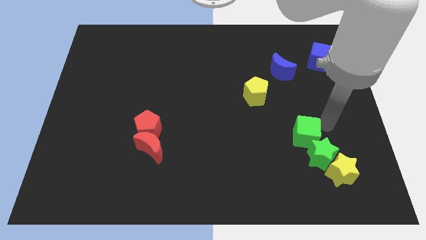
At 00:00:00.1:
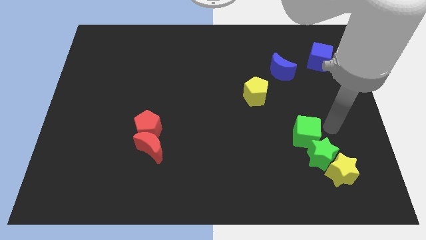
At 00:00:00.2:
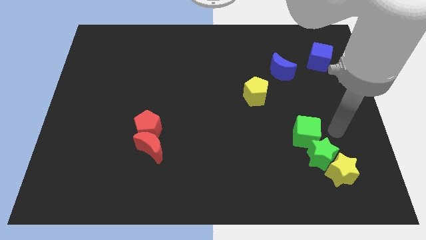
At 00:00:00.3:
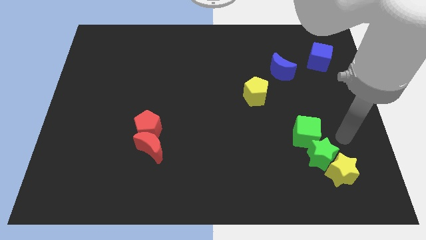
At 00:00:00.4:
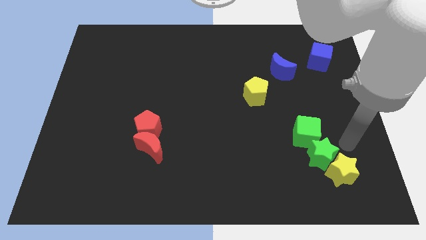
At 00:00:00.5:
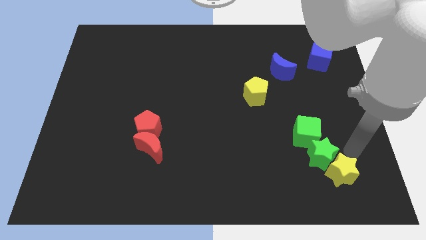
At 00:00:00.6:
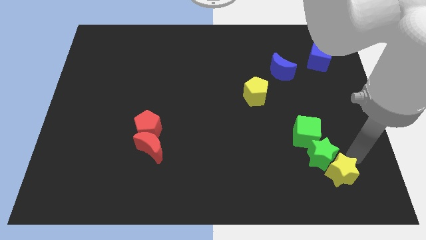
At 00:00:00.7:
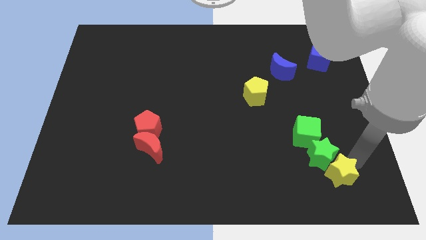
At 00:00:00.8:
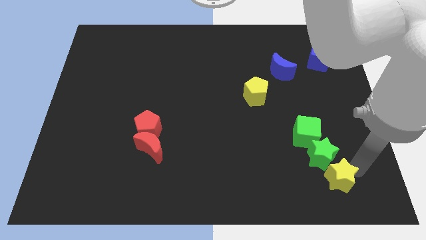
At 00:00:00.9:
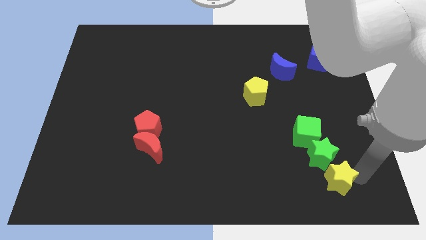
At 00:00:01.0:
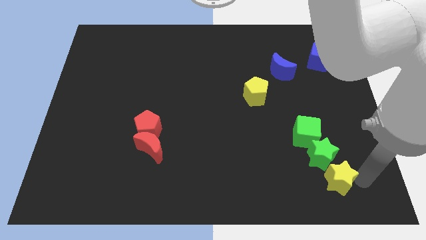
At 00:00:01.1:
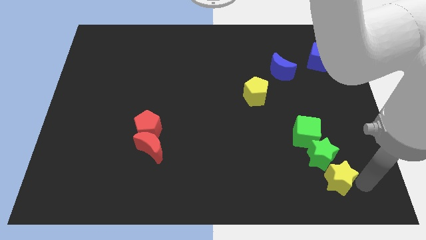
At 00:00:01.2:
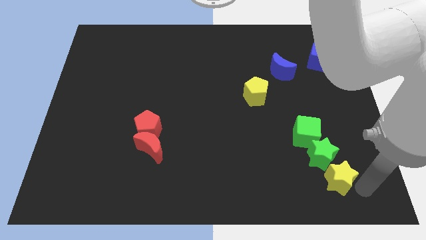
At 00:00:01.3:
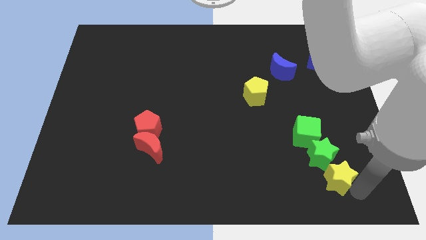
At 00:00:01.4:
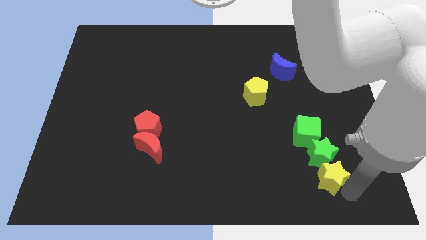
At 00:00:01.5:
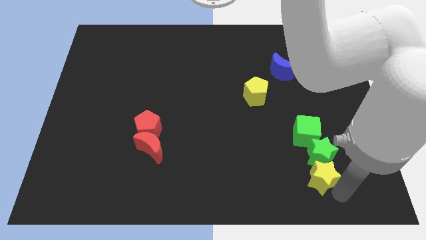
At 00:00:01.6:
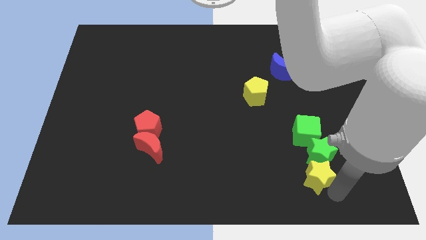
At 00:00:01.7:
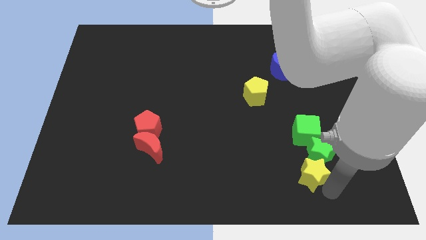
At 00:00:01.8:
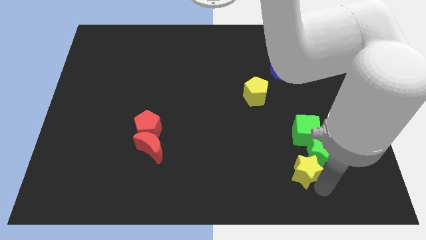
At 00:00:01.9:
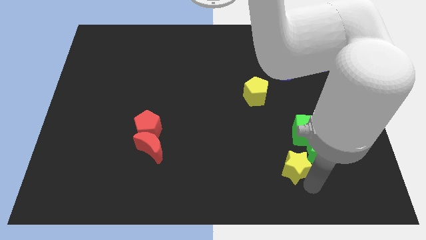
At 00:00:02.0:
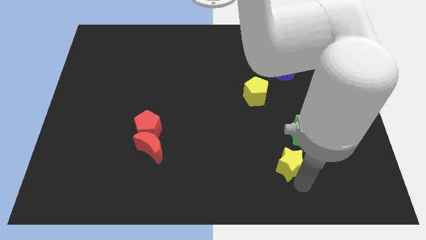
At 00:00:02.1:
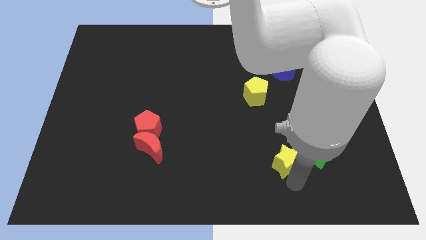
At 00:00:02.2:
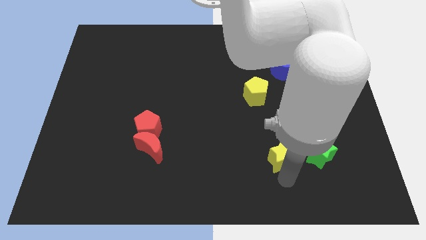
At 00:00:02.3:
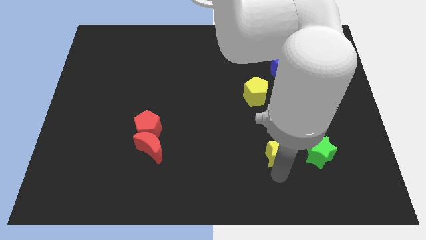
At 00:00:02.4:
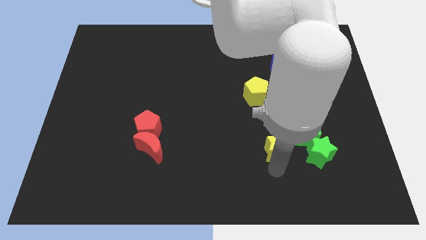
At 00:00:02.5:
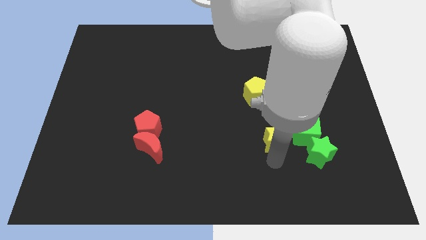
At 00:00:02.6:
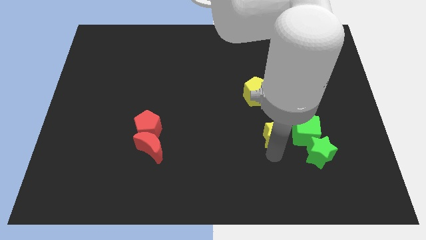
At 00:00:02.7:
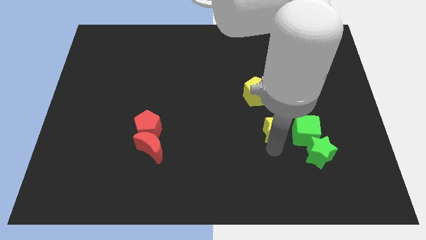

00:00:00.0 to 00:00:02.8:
place the yellow star left to the green cube

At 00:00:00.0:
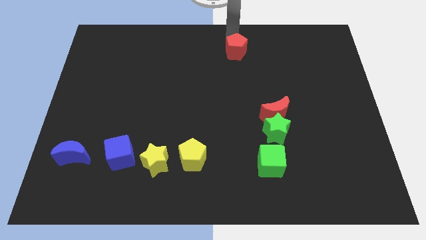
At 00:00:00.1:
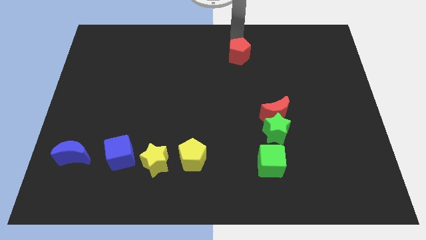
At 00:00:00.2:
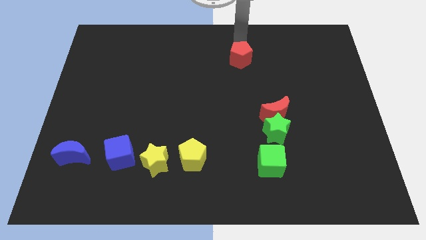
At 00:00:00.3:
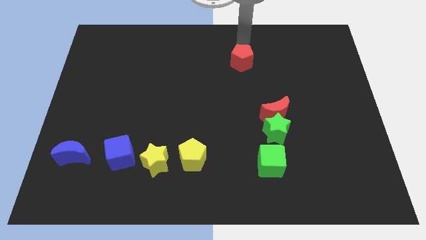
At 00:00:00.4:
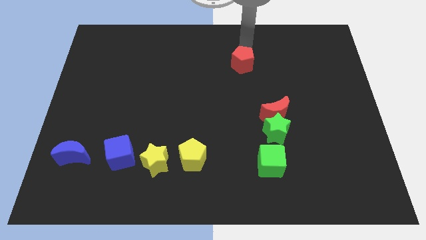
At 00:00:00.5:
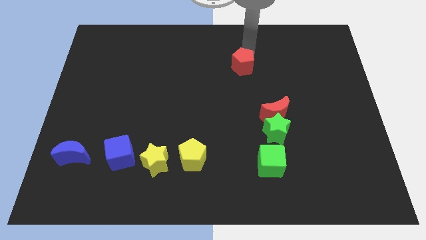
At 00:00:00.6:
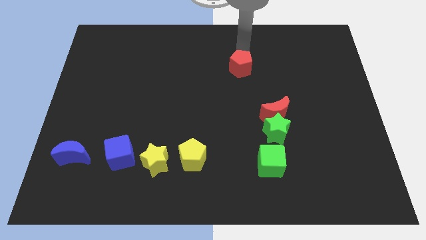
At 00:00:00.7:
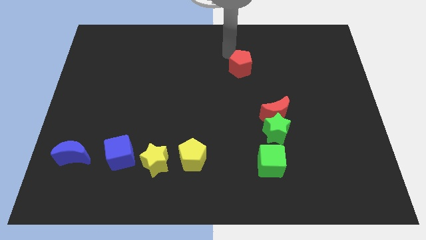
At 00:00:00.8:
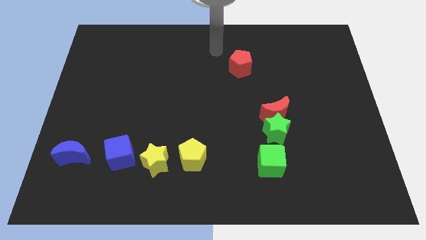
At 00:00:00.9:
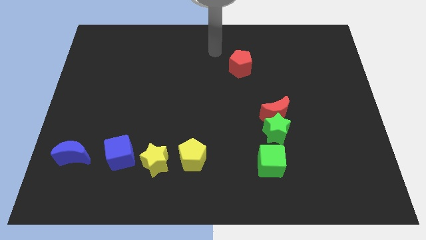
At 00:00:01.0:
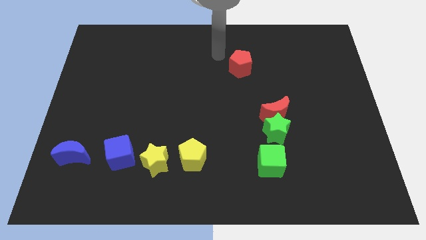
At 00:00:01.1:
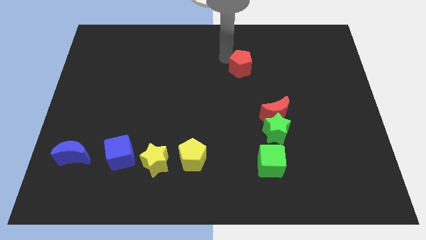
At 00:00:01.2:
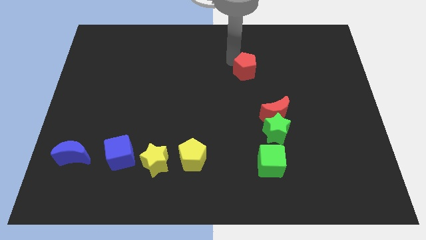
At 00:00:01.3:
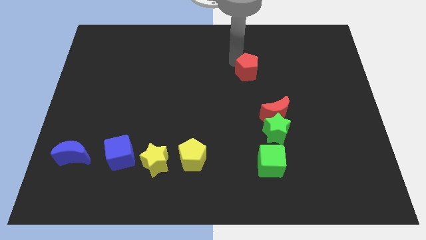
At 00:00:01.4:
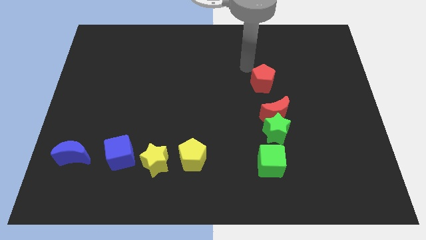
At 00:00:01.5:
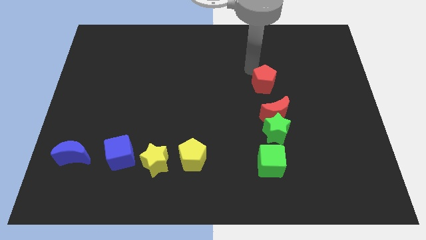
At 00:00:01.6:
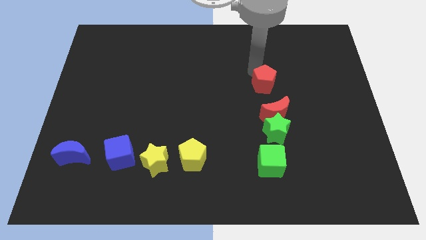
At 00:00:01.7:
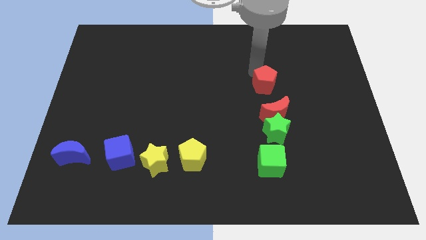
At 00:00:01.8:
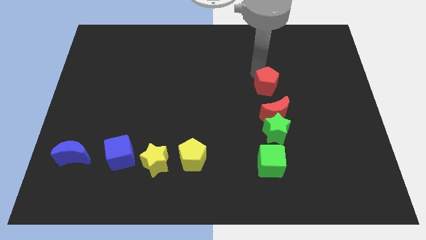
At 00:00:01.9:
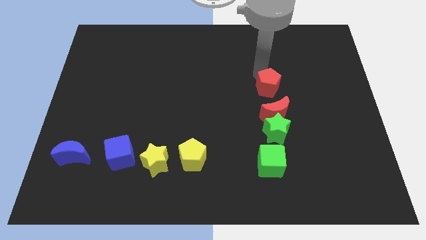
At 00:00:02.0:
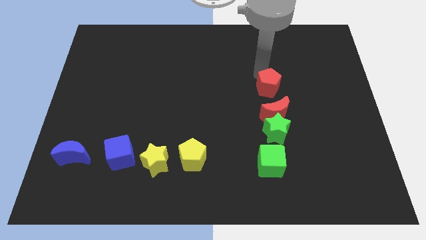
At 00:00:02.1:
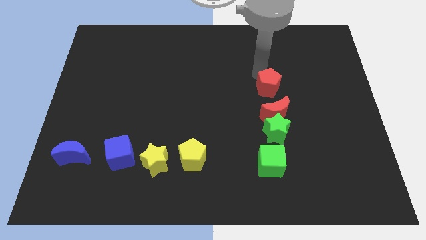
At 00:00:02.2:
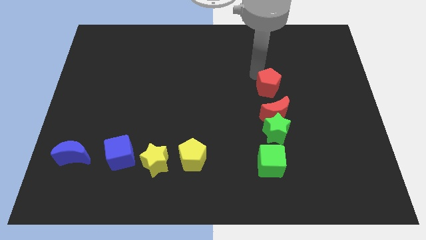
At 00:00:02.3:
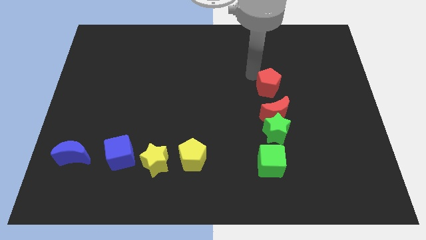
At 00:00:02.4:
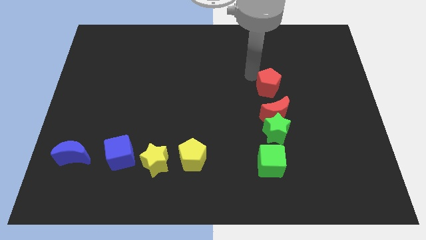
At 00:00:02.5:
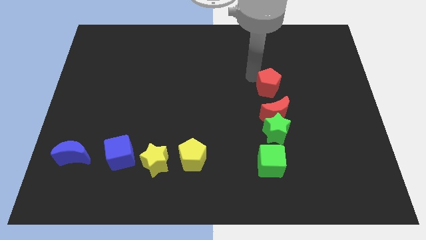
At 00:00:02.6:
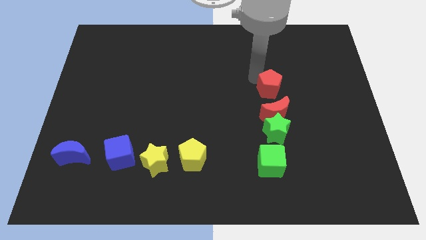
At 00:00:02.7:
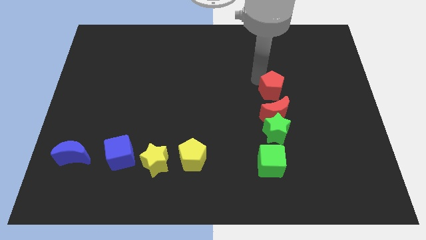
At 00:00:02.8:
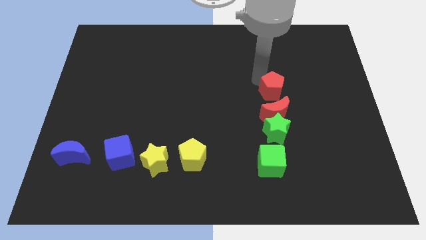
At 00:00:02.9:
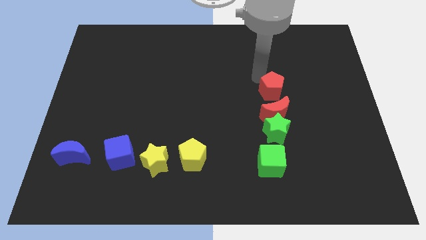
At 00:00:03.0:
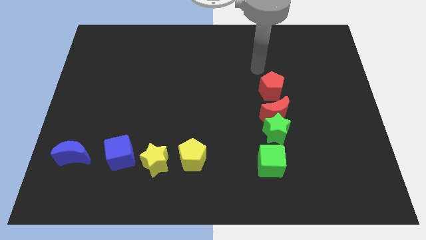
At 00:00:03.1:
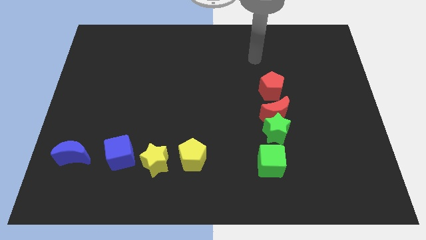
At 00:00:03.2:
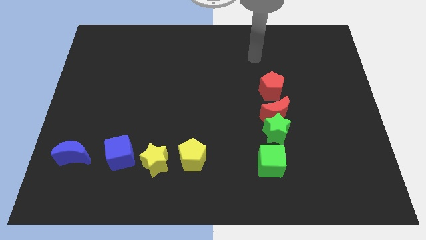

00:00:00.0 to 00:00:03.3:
put the red pentagon vertically above the red crescent

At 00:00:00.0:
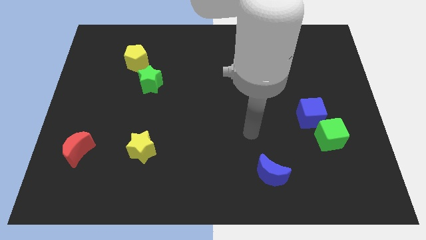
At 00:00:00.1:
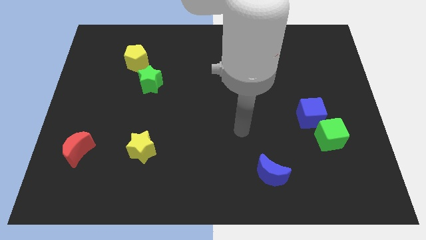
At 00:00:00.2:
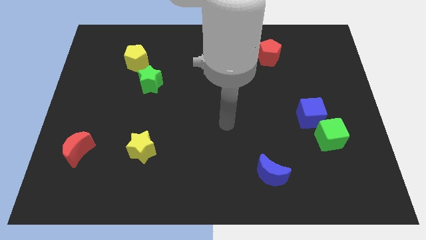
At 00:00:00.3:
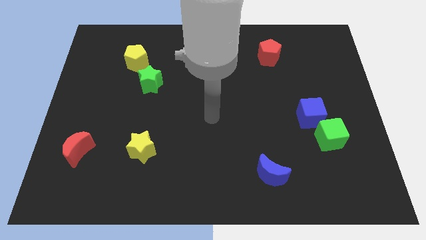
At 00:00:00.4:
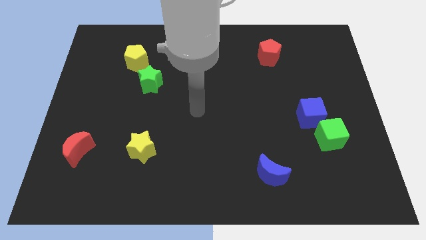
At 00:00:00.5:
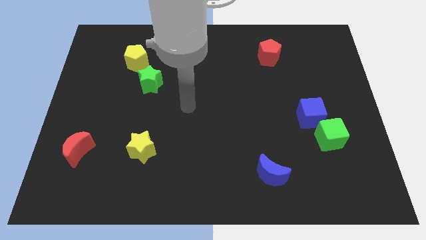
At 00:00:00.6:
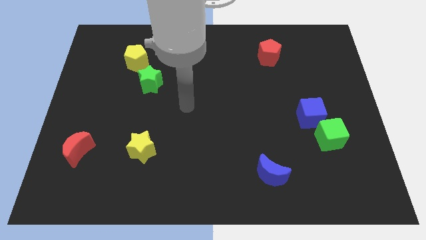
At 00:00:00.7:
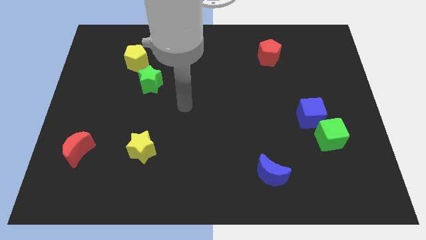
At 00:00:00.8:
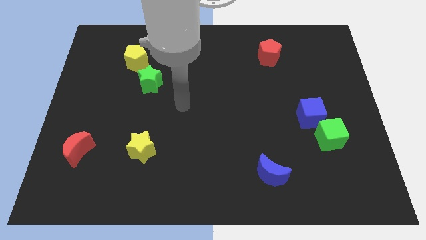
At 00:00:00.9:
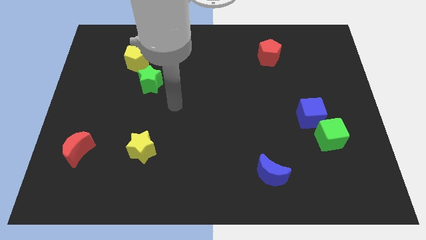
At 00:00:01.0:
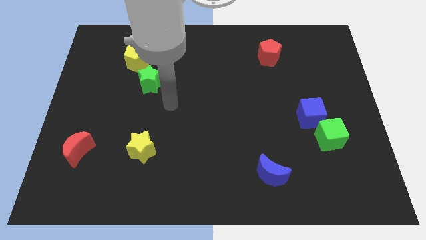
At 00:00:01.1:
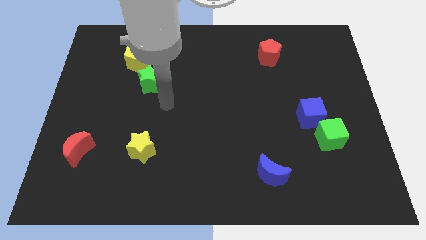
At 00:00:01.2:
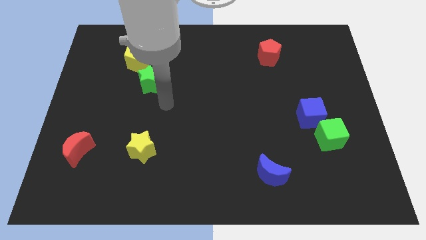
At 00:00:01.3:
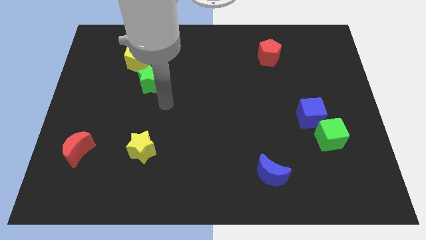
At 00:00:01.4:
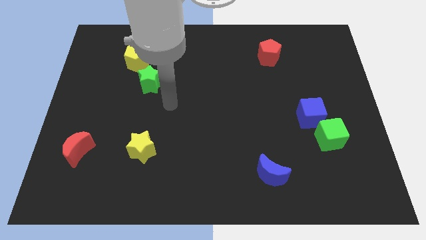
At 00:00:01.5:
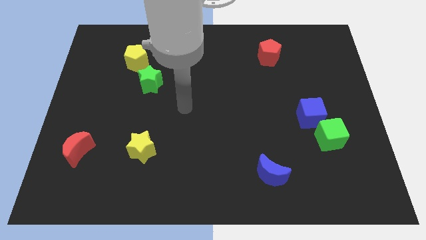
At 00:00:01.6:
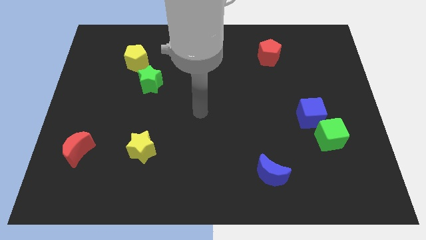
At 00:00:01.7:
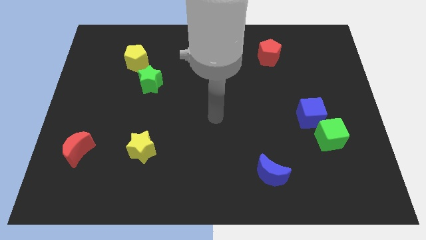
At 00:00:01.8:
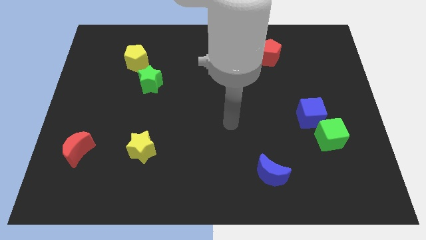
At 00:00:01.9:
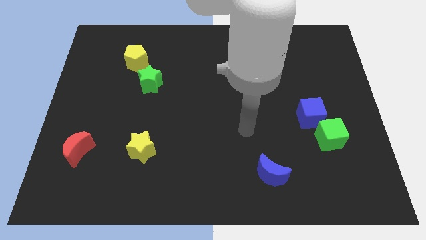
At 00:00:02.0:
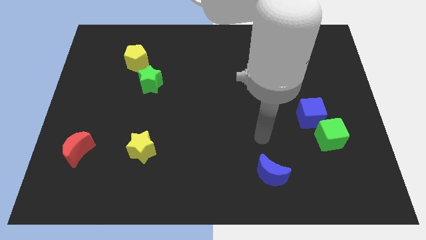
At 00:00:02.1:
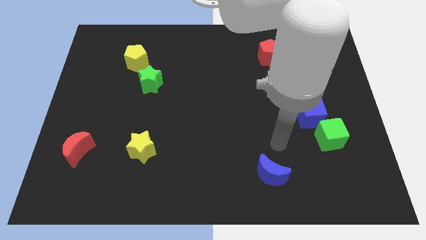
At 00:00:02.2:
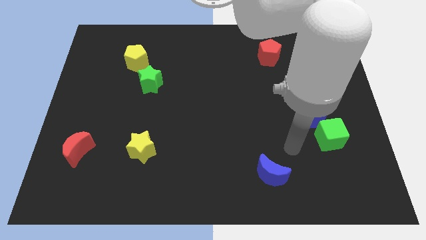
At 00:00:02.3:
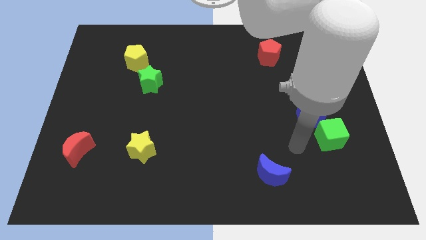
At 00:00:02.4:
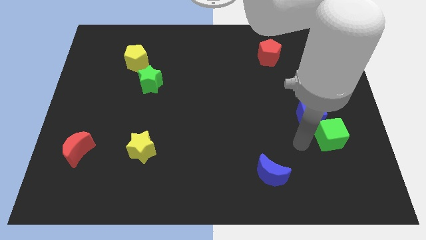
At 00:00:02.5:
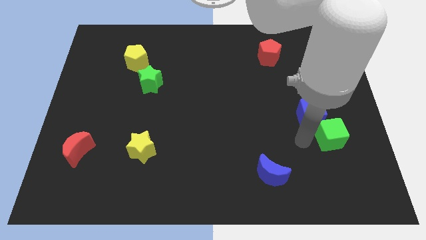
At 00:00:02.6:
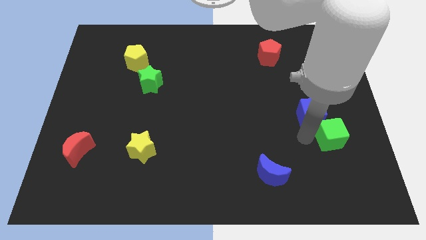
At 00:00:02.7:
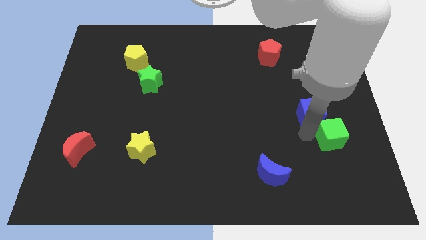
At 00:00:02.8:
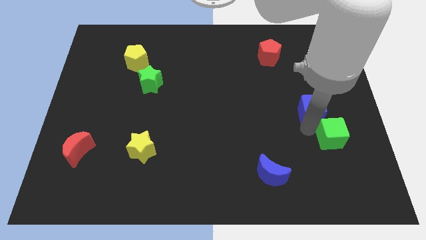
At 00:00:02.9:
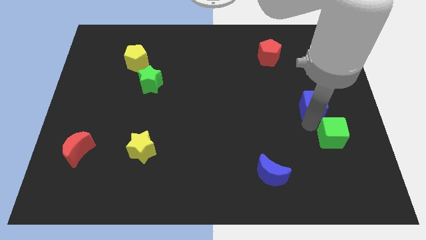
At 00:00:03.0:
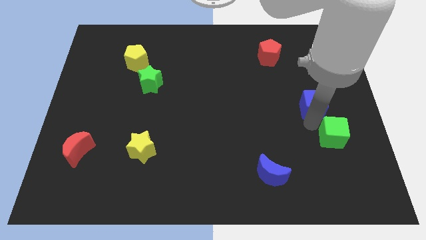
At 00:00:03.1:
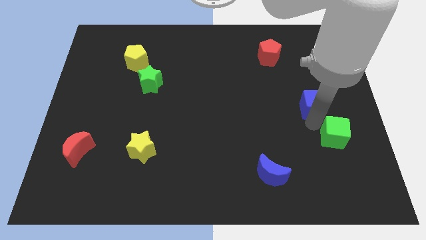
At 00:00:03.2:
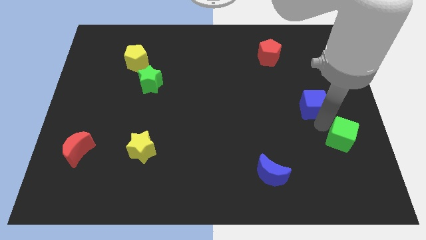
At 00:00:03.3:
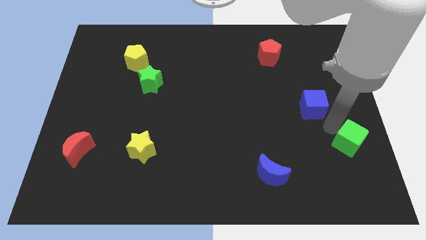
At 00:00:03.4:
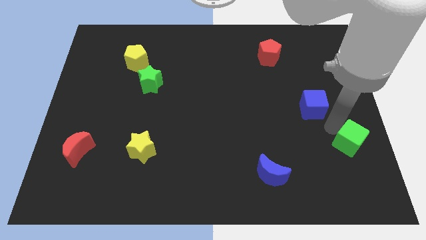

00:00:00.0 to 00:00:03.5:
separate the green cube from the blue cube
